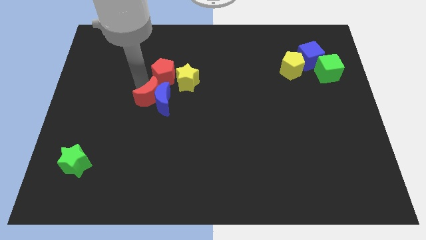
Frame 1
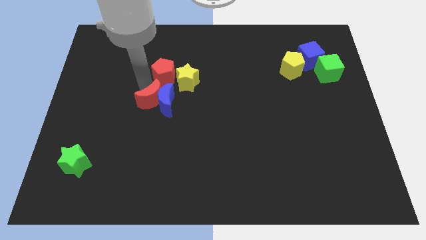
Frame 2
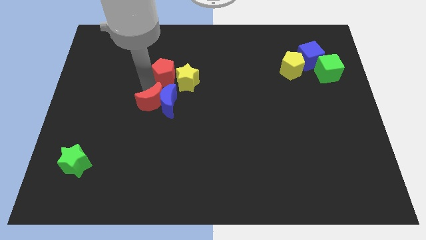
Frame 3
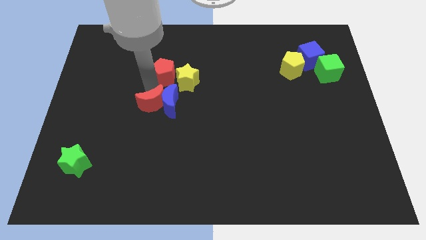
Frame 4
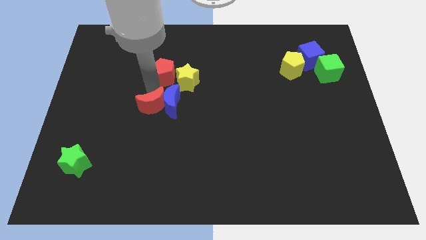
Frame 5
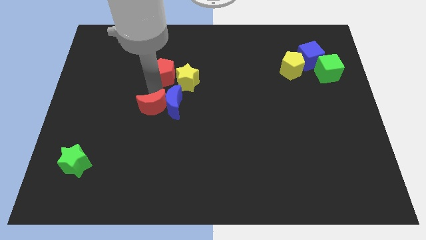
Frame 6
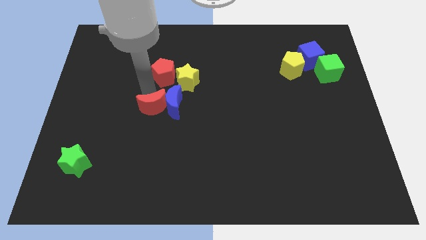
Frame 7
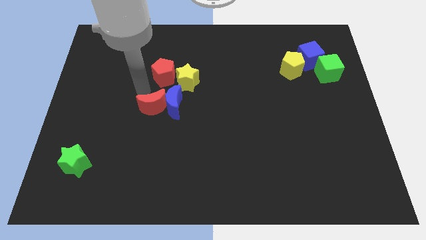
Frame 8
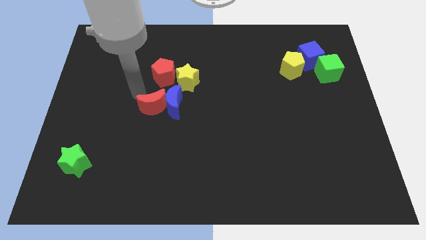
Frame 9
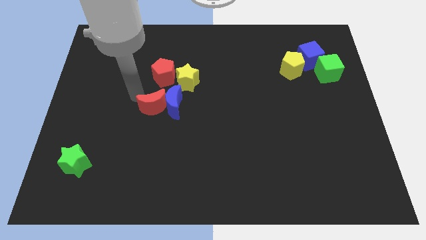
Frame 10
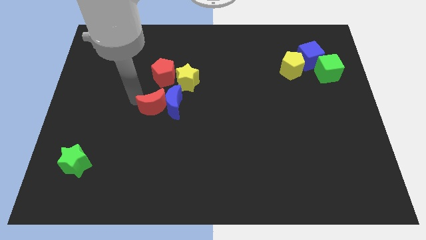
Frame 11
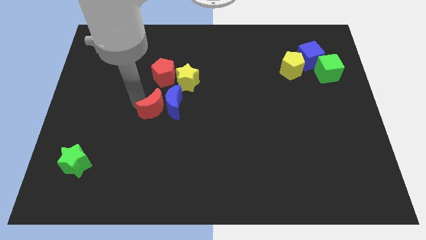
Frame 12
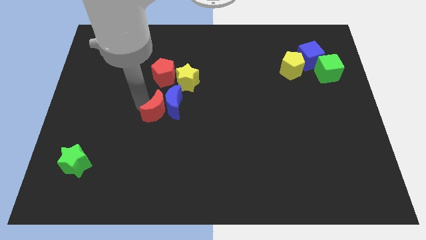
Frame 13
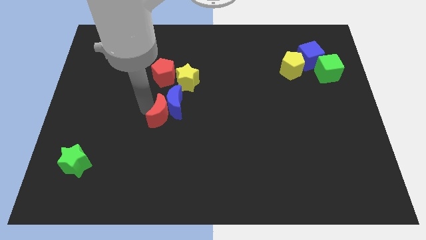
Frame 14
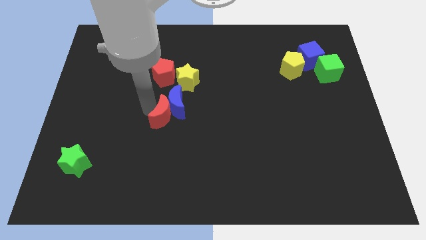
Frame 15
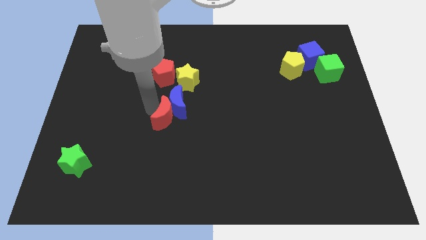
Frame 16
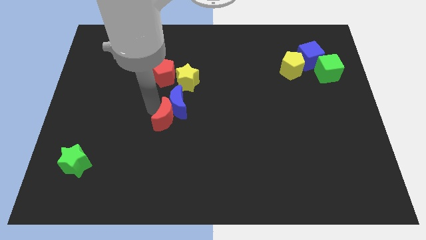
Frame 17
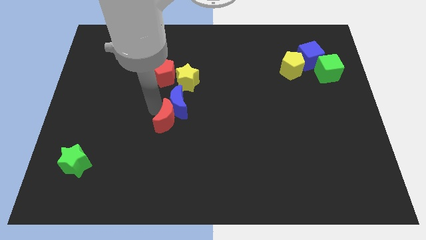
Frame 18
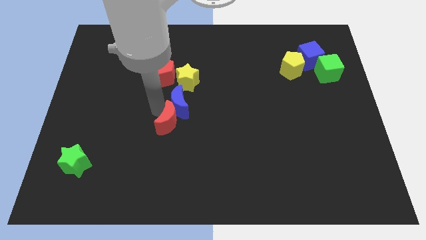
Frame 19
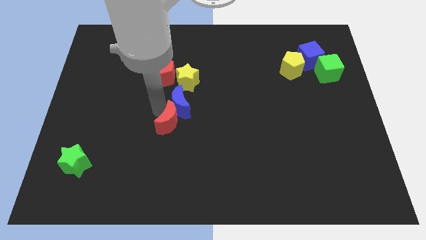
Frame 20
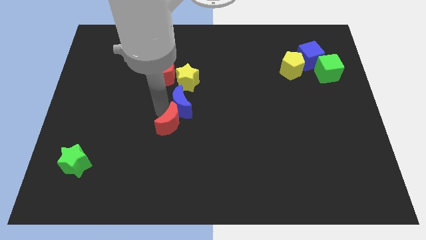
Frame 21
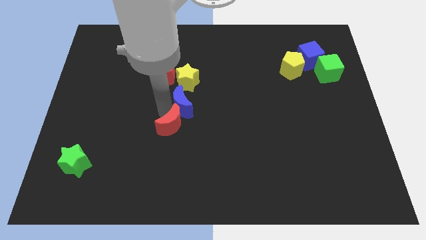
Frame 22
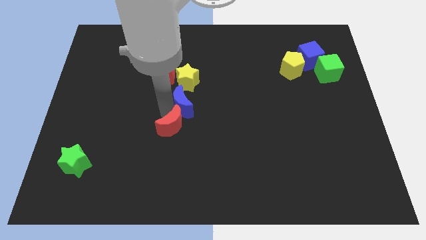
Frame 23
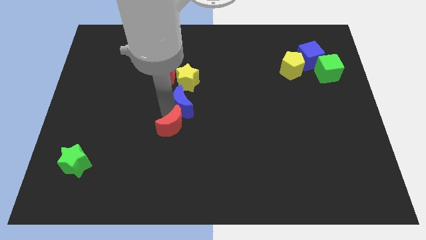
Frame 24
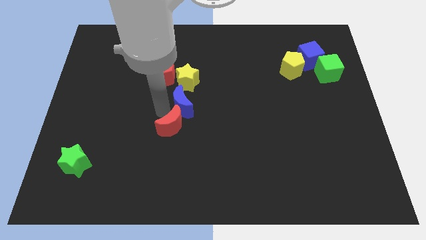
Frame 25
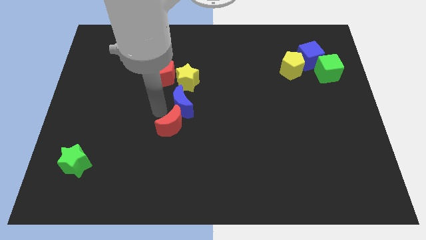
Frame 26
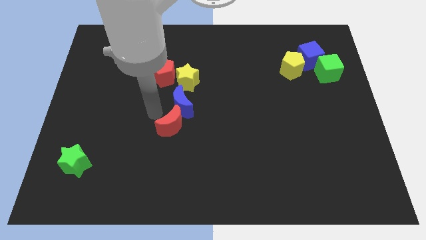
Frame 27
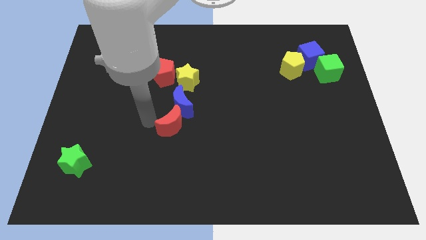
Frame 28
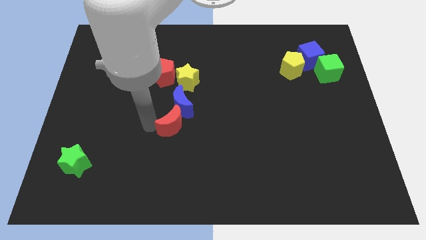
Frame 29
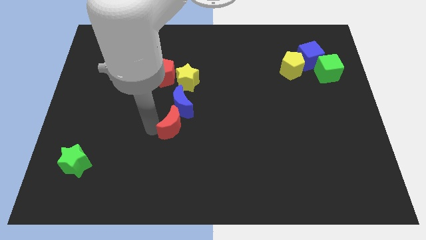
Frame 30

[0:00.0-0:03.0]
move the red crescent below the red pentagon

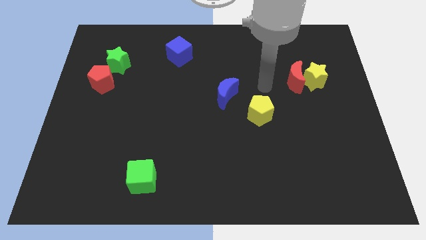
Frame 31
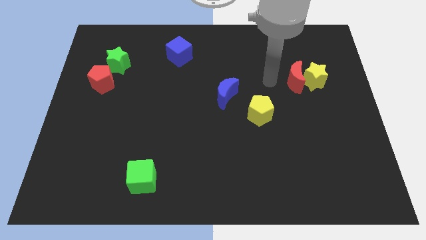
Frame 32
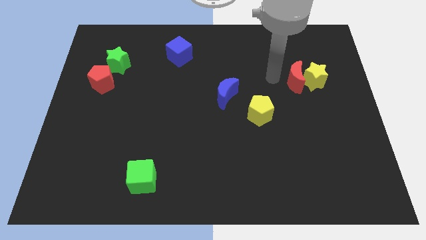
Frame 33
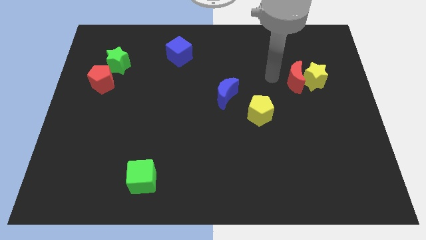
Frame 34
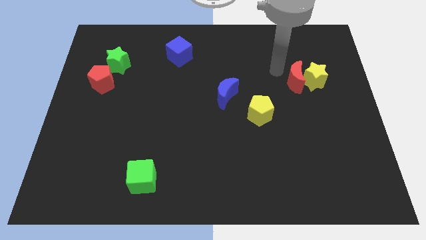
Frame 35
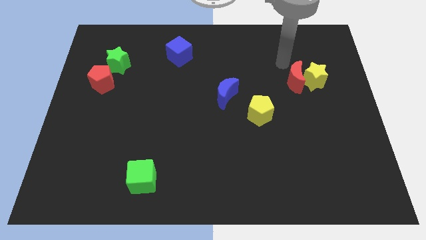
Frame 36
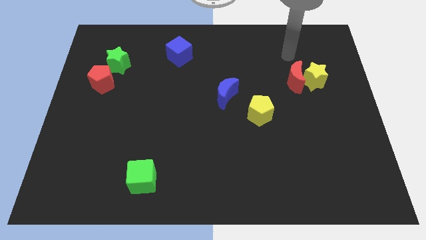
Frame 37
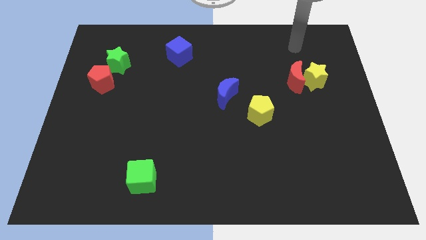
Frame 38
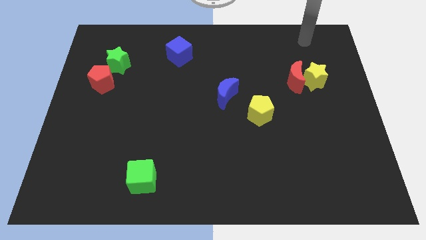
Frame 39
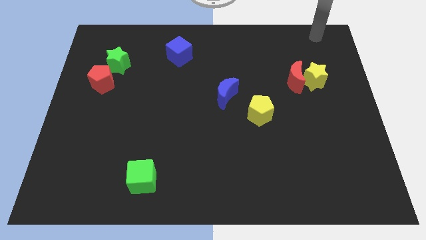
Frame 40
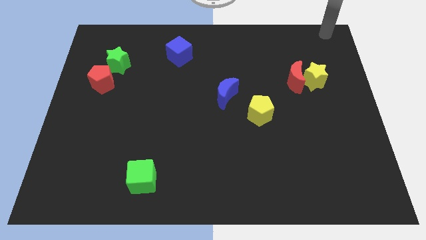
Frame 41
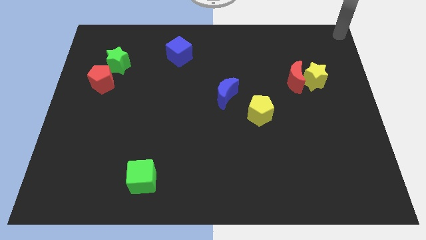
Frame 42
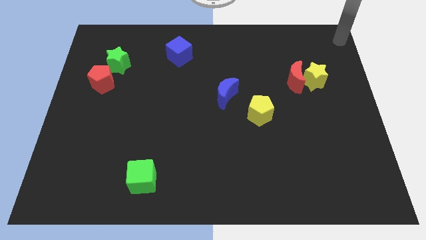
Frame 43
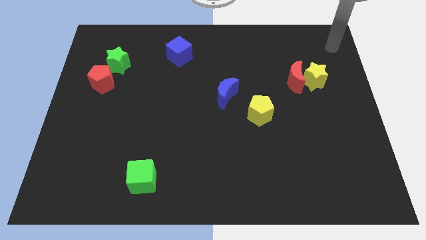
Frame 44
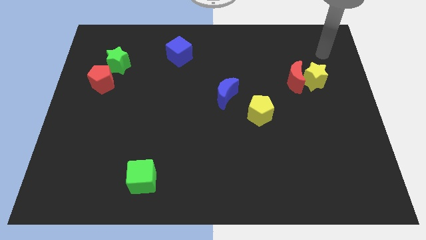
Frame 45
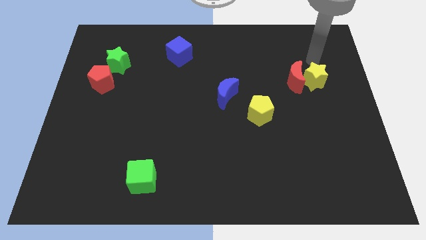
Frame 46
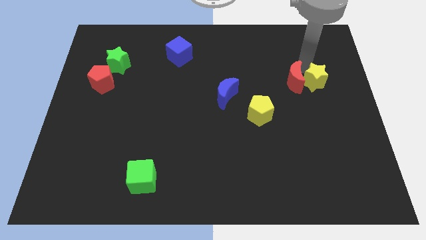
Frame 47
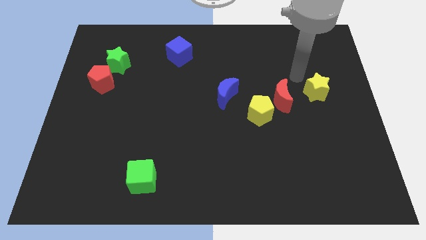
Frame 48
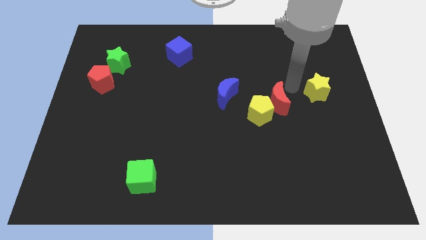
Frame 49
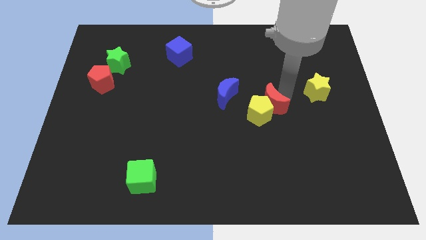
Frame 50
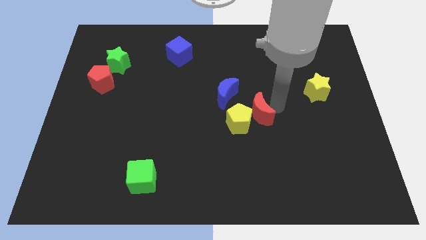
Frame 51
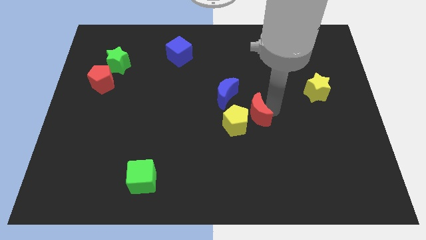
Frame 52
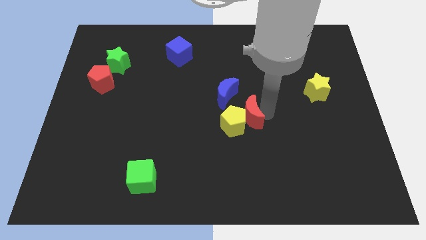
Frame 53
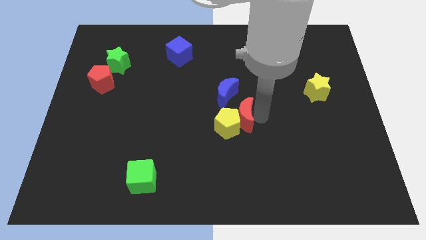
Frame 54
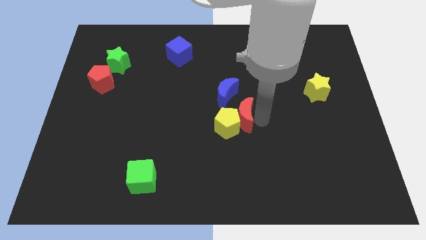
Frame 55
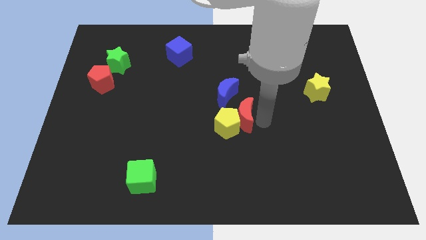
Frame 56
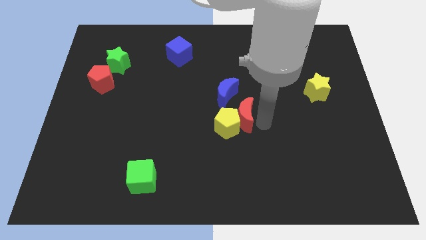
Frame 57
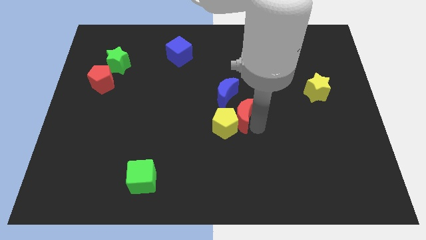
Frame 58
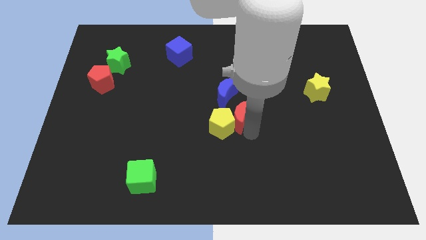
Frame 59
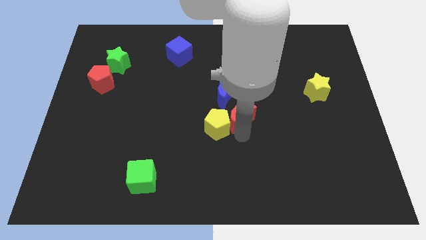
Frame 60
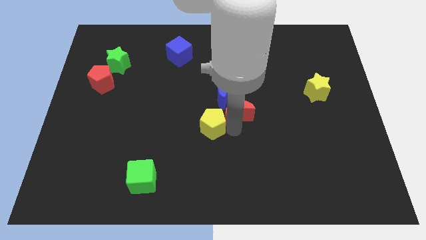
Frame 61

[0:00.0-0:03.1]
push the red crescent and yellow pentagon to the bottom side of the blue crescent

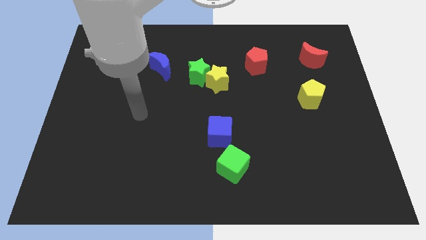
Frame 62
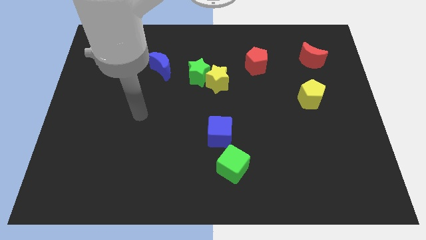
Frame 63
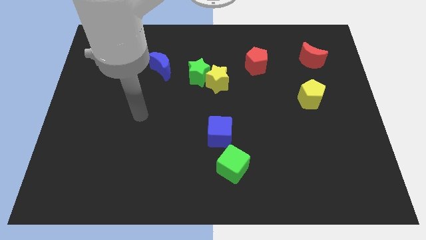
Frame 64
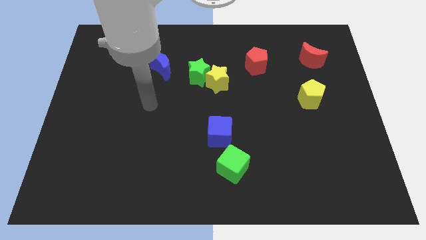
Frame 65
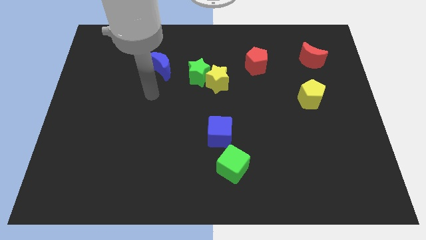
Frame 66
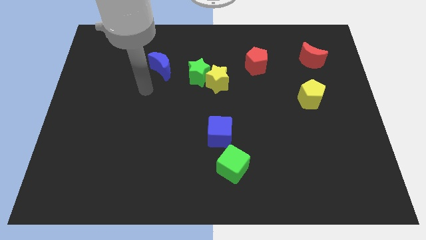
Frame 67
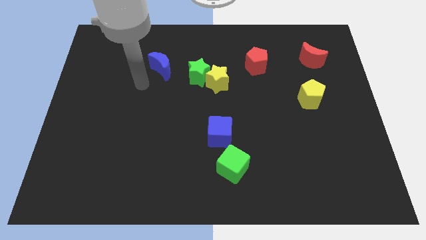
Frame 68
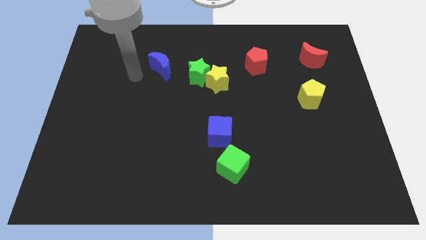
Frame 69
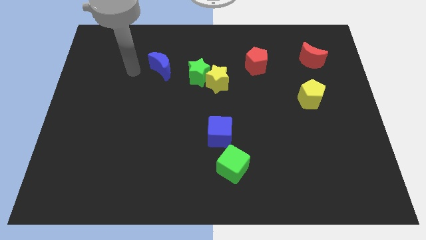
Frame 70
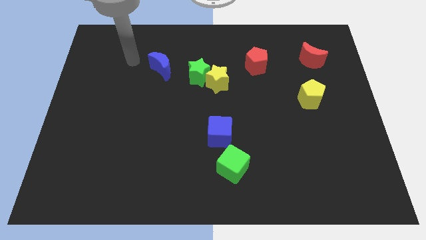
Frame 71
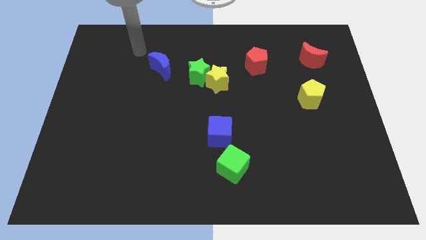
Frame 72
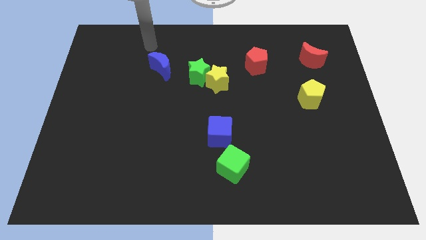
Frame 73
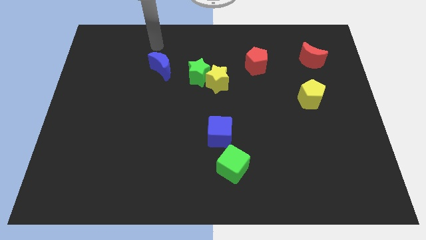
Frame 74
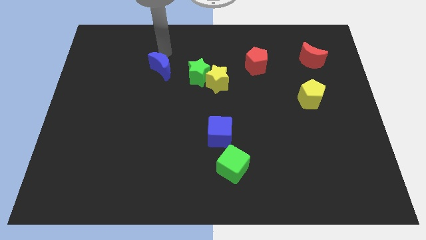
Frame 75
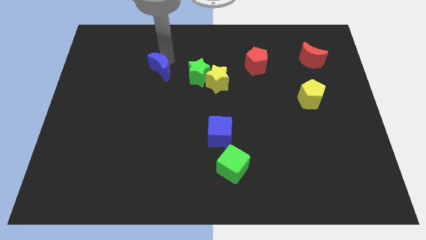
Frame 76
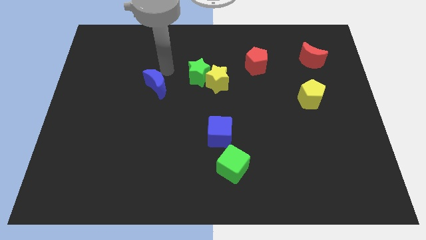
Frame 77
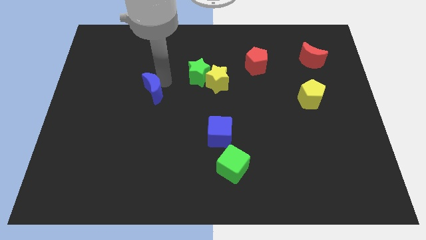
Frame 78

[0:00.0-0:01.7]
push the blue crescent slightly to the bottom

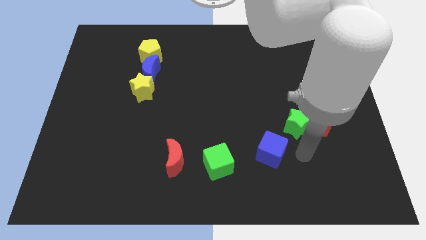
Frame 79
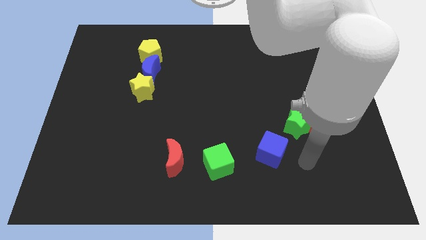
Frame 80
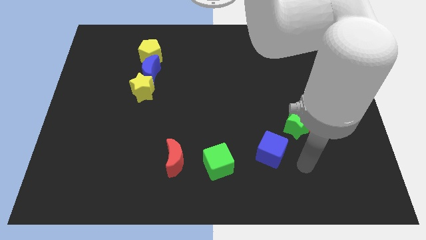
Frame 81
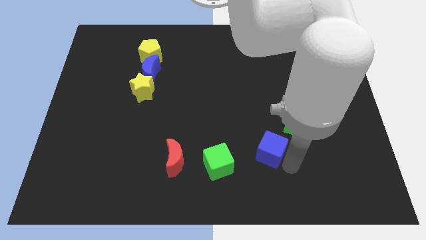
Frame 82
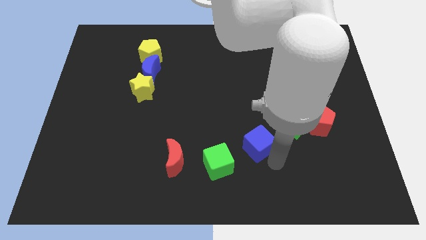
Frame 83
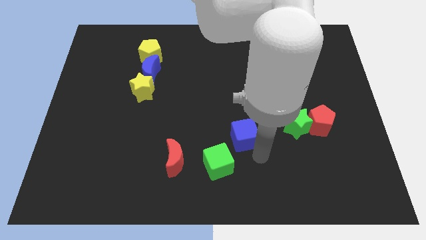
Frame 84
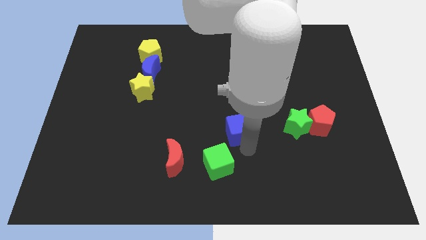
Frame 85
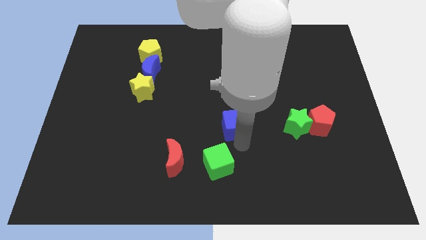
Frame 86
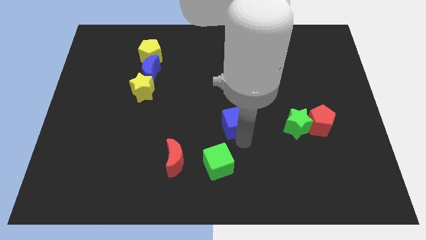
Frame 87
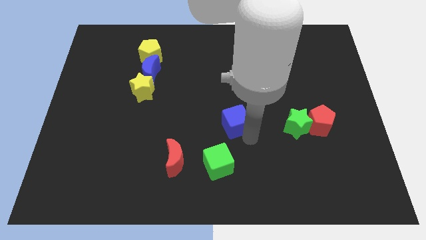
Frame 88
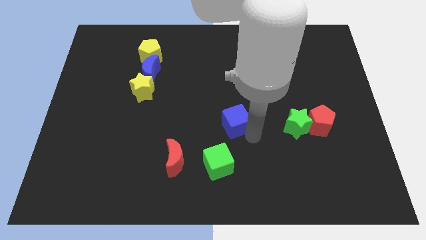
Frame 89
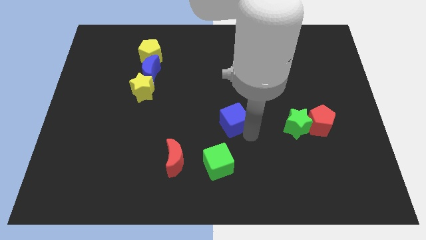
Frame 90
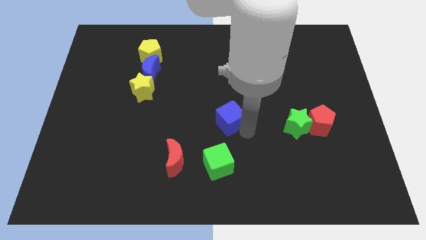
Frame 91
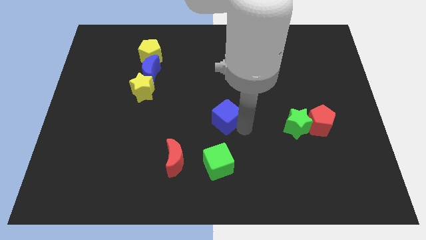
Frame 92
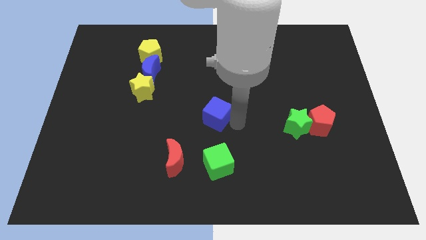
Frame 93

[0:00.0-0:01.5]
place the blue cube above the green cube
